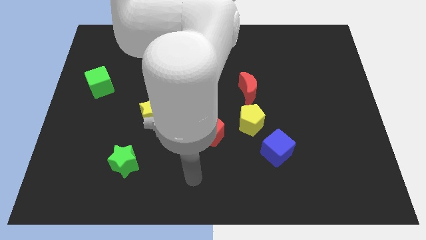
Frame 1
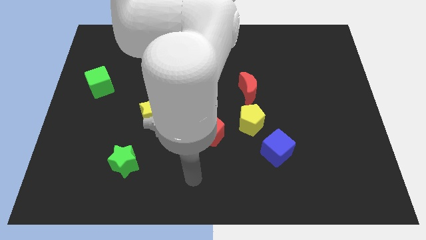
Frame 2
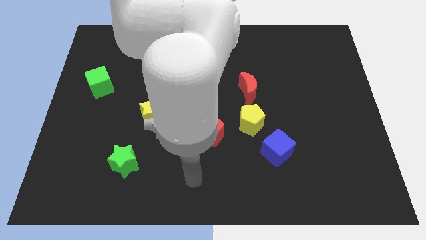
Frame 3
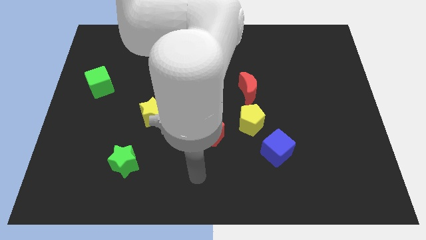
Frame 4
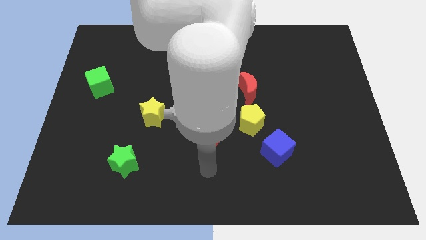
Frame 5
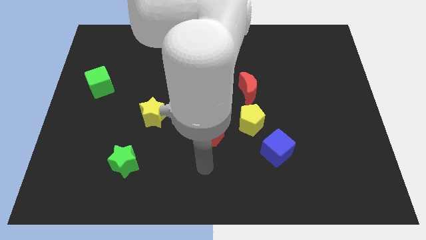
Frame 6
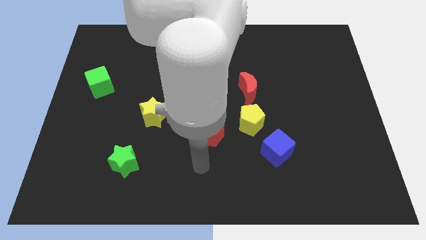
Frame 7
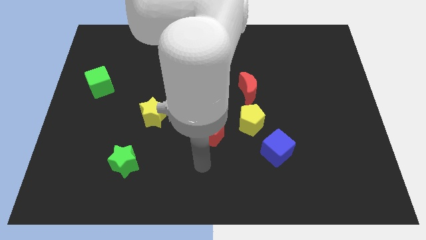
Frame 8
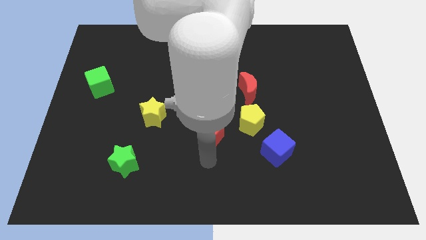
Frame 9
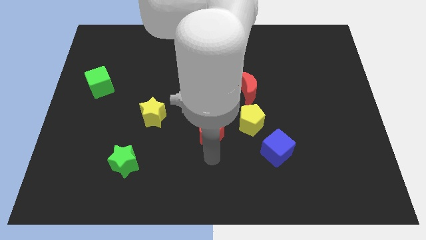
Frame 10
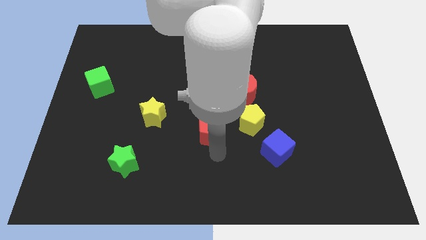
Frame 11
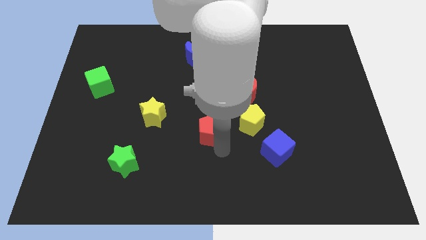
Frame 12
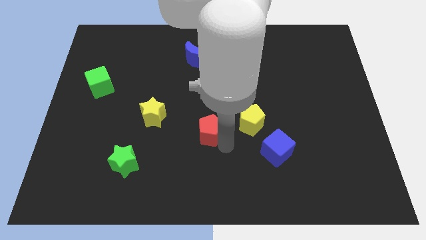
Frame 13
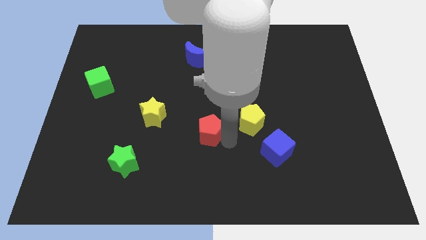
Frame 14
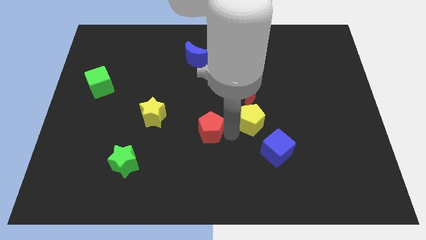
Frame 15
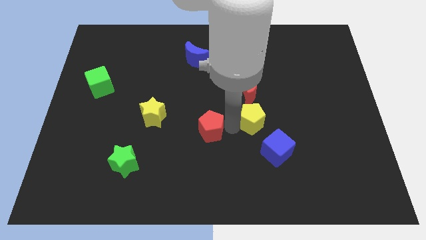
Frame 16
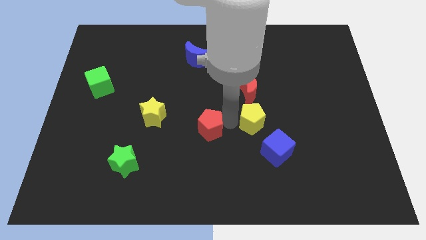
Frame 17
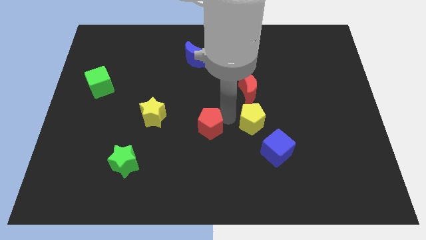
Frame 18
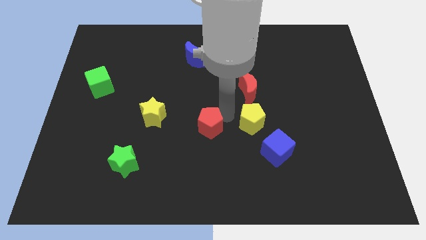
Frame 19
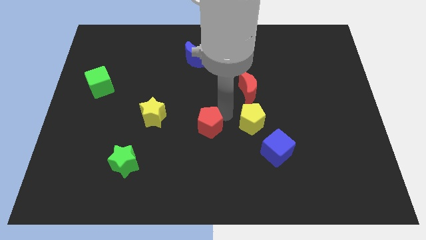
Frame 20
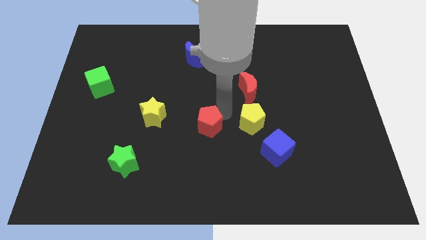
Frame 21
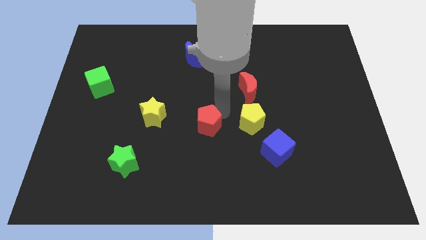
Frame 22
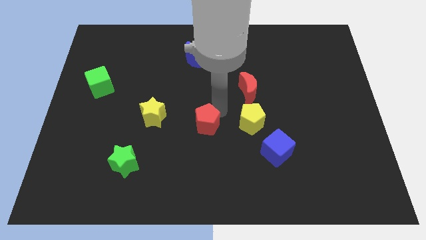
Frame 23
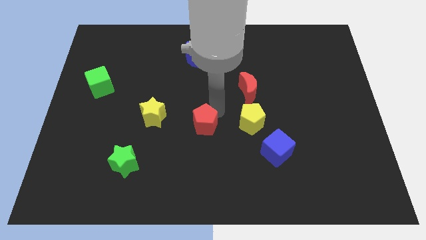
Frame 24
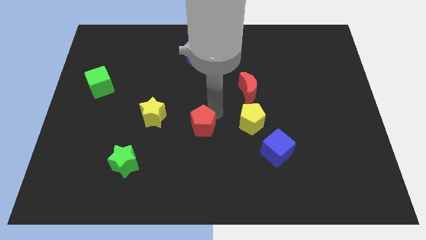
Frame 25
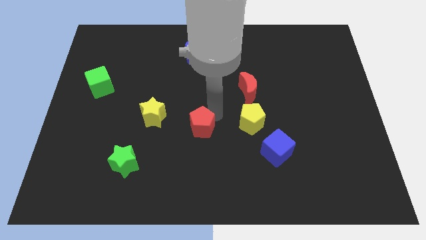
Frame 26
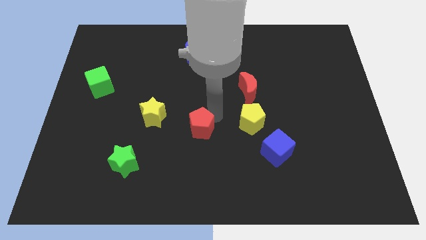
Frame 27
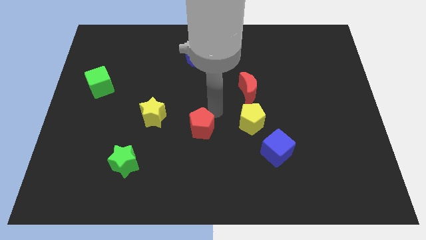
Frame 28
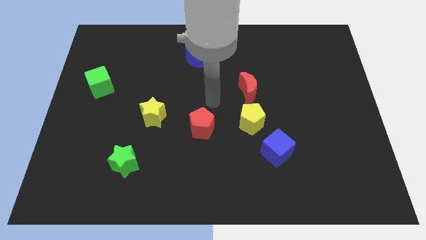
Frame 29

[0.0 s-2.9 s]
push the red pentagon upwards slightly

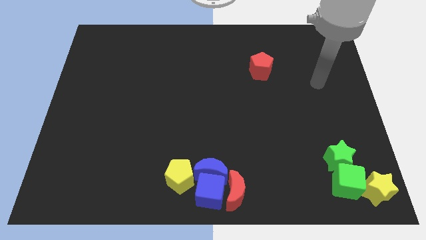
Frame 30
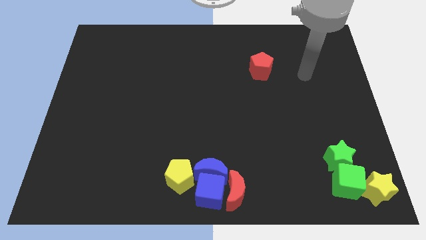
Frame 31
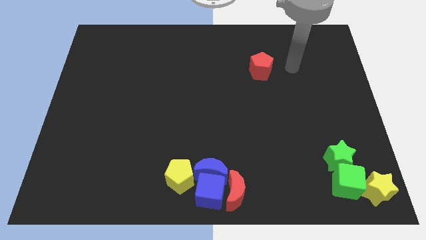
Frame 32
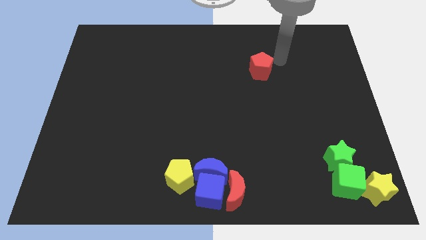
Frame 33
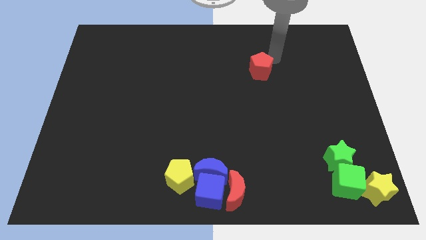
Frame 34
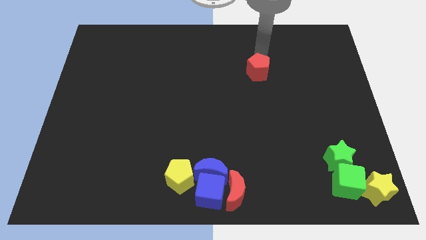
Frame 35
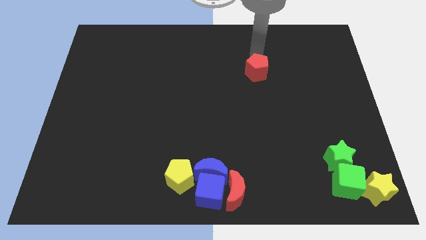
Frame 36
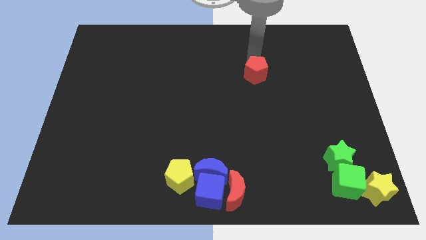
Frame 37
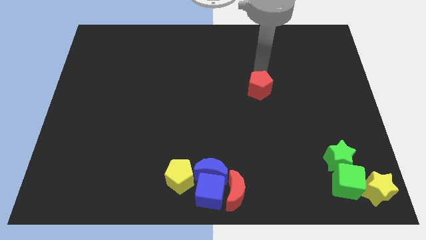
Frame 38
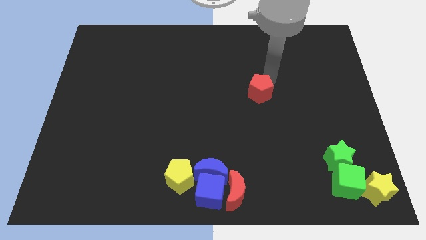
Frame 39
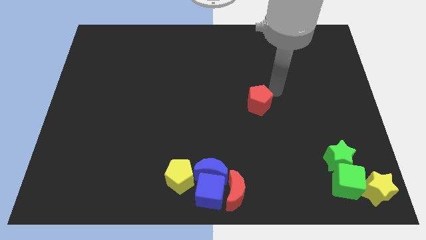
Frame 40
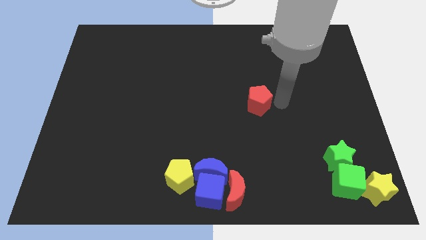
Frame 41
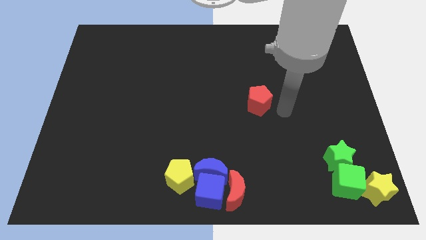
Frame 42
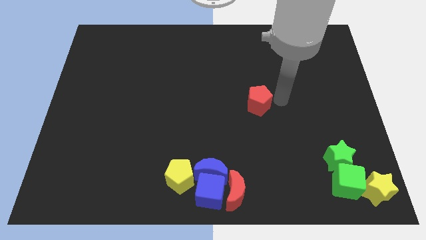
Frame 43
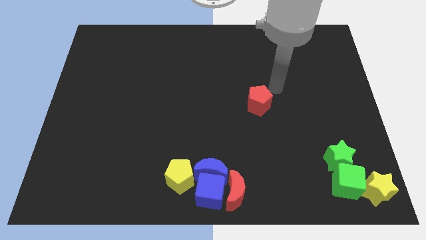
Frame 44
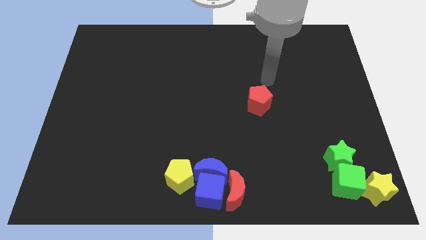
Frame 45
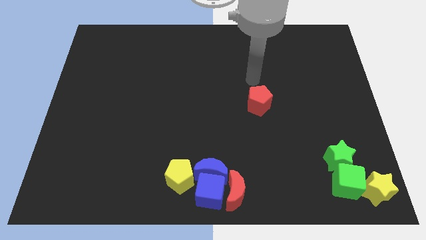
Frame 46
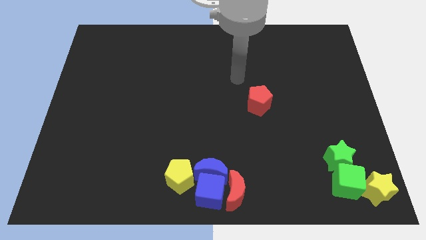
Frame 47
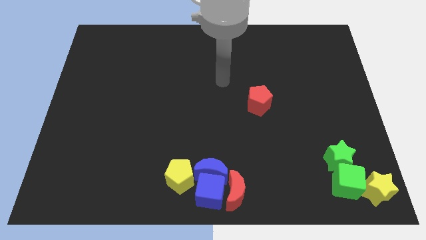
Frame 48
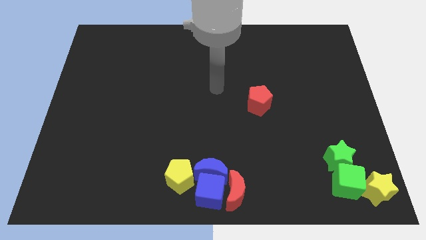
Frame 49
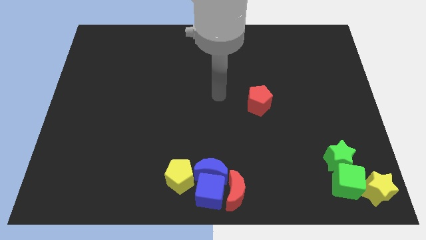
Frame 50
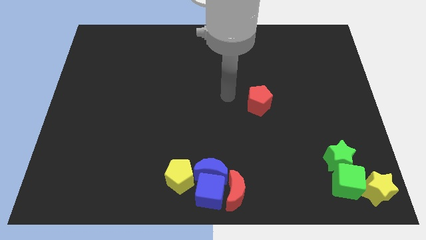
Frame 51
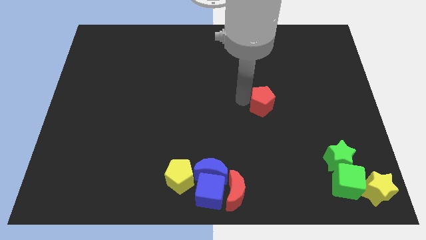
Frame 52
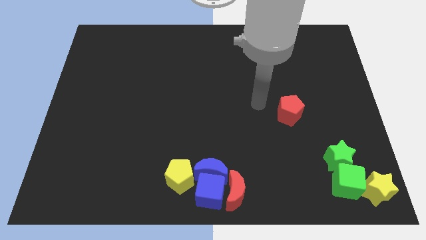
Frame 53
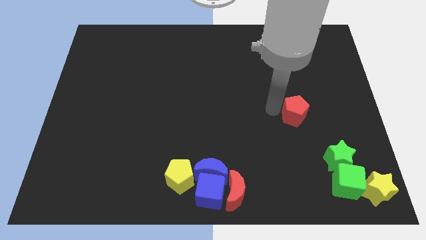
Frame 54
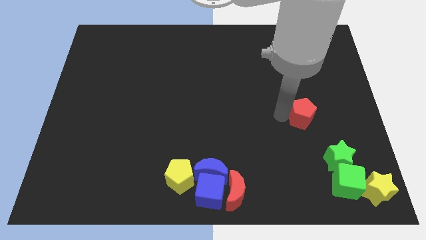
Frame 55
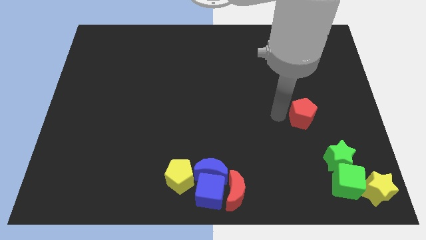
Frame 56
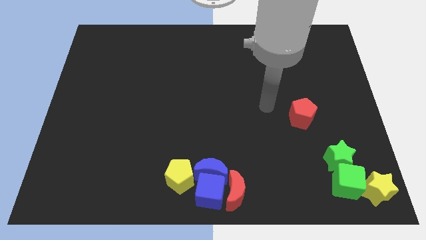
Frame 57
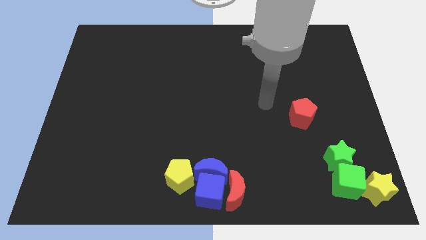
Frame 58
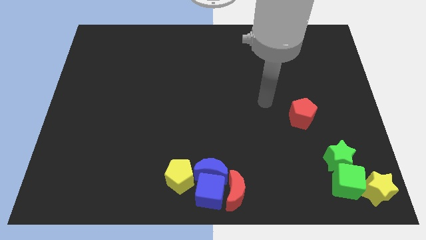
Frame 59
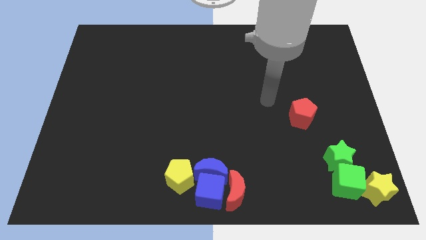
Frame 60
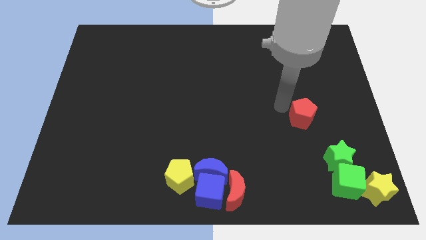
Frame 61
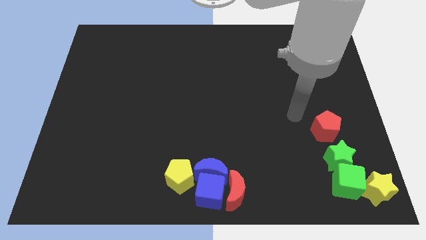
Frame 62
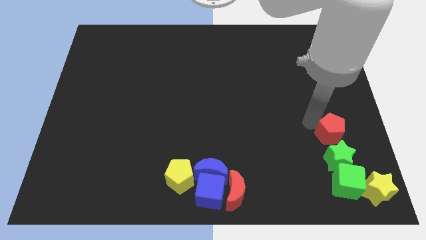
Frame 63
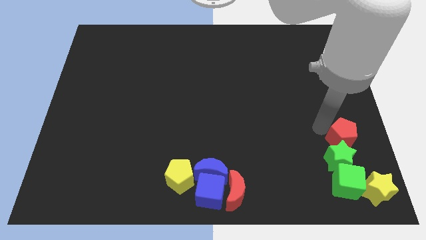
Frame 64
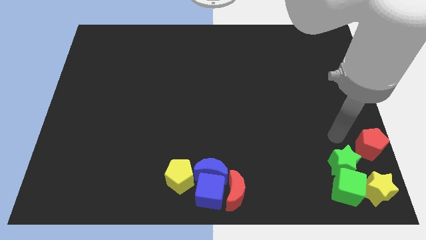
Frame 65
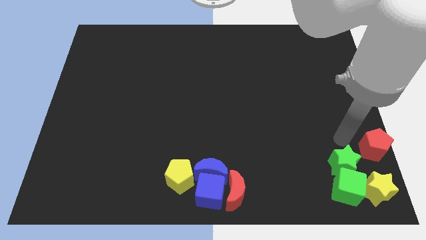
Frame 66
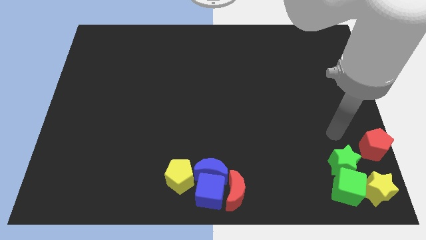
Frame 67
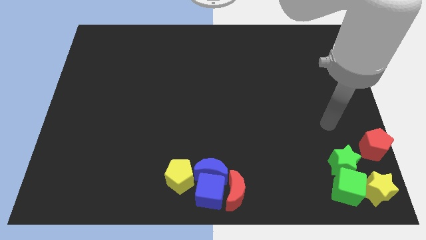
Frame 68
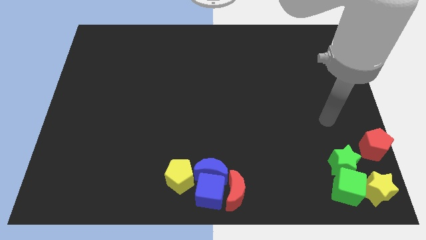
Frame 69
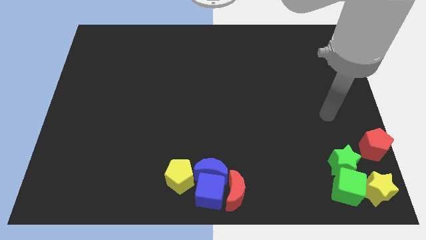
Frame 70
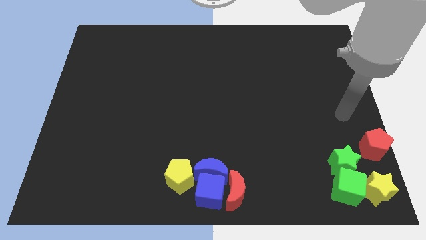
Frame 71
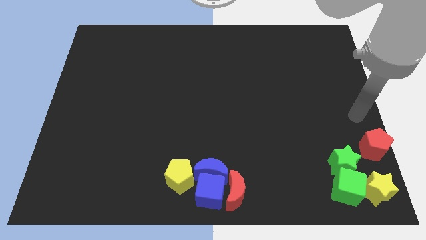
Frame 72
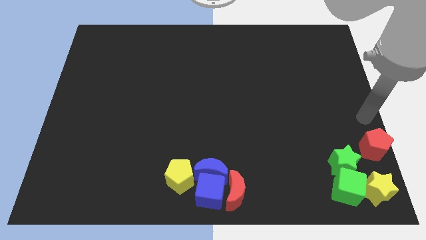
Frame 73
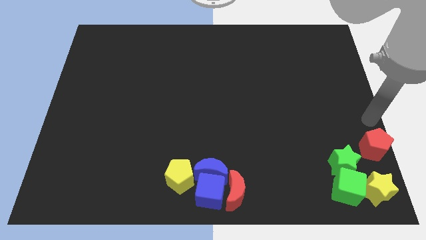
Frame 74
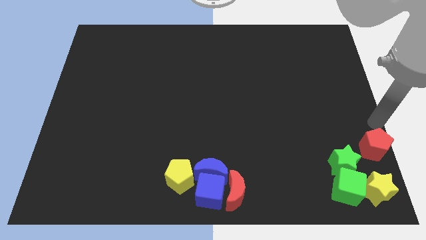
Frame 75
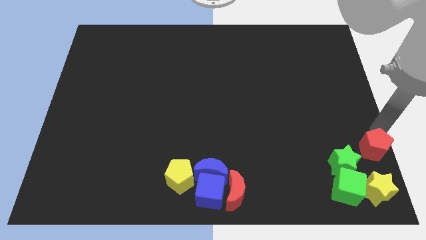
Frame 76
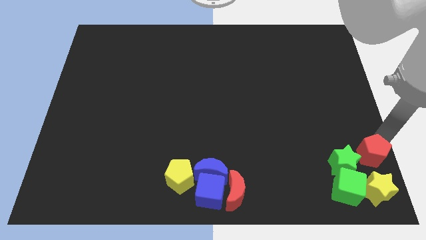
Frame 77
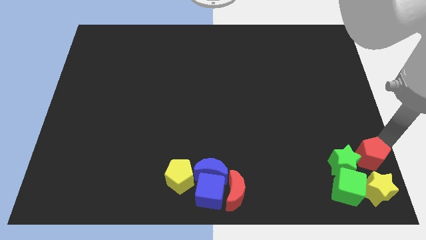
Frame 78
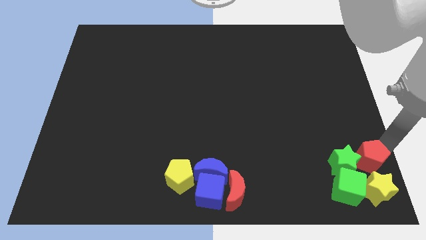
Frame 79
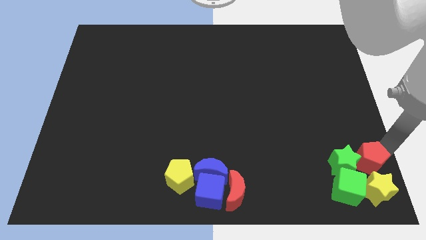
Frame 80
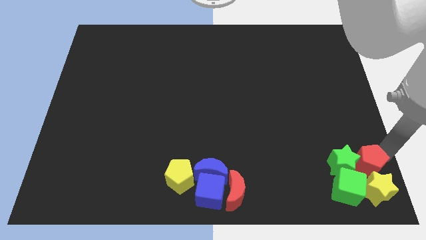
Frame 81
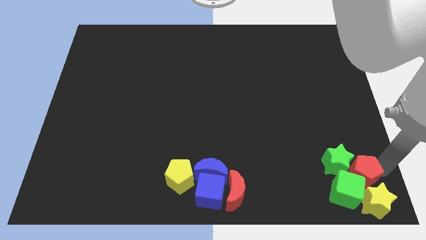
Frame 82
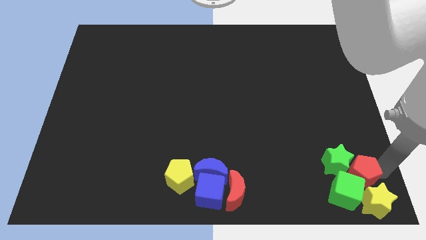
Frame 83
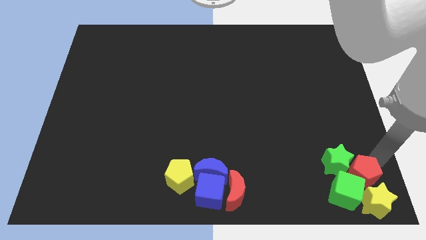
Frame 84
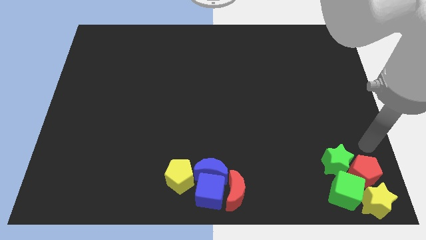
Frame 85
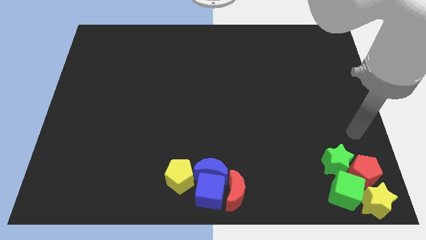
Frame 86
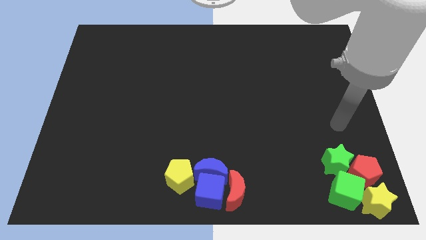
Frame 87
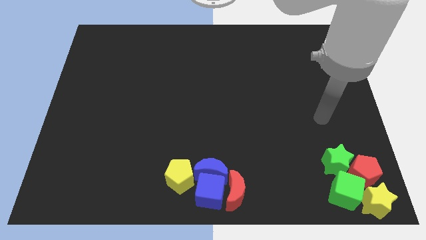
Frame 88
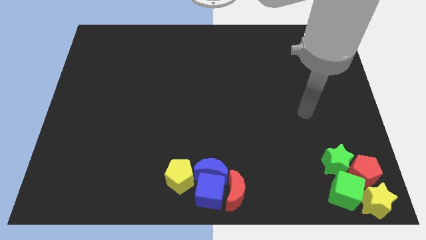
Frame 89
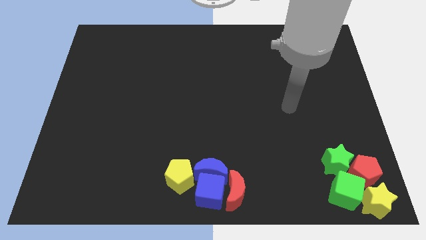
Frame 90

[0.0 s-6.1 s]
push the red pentagon into the yellow star
